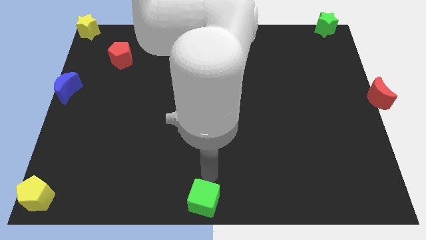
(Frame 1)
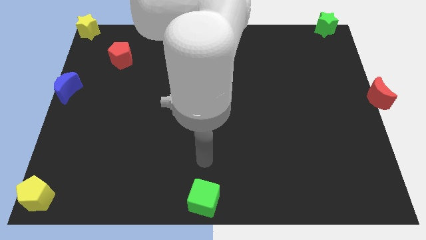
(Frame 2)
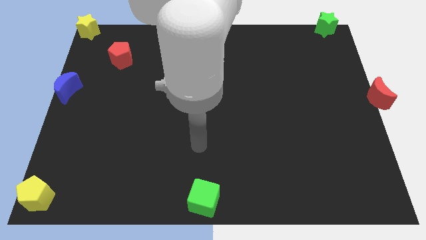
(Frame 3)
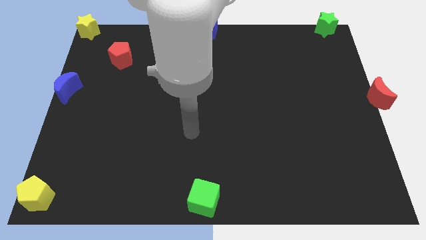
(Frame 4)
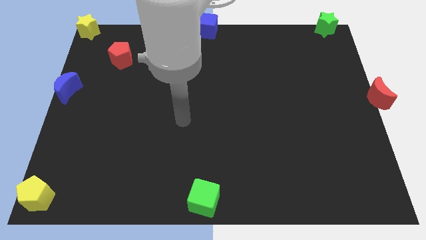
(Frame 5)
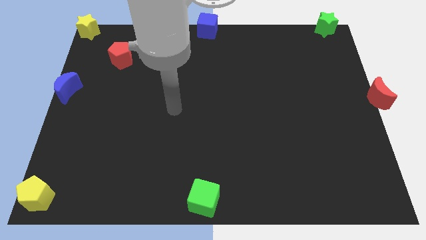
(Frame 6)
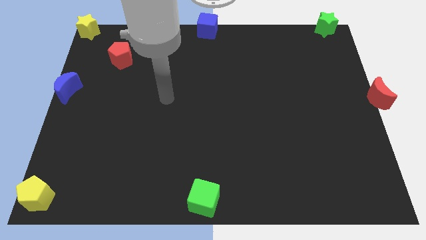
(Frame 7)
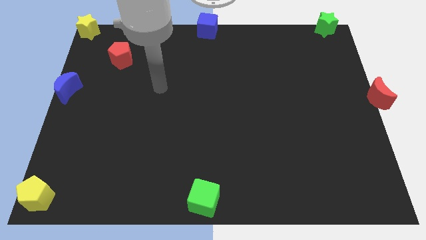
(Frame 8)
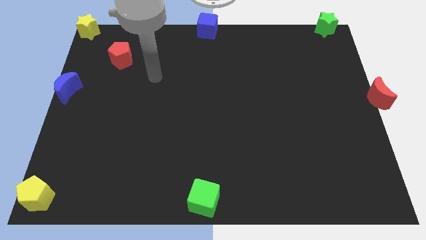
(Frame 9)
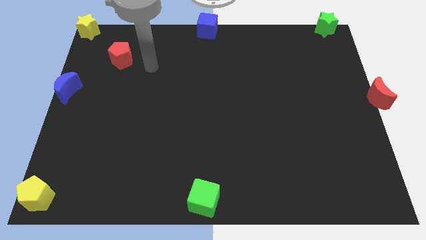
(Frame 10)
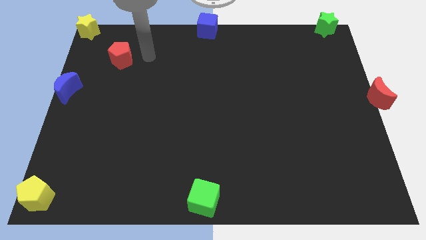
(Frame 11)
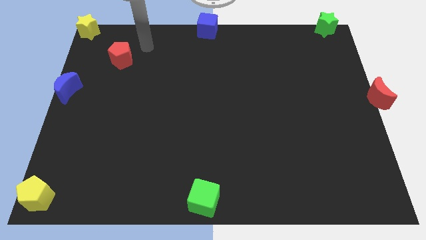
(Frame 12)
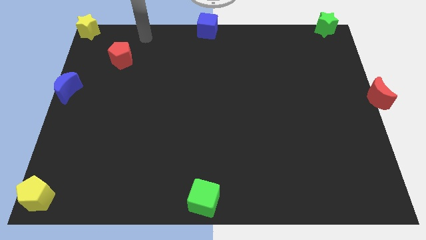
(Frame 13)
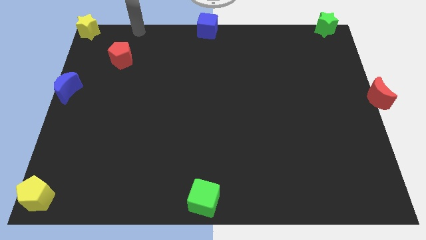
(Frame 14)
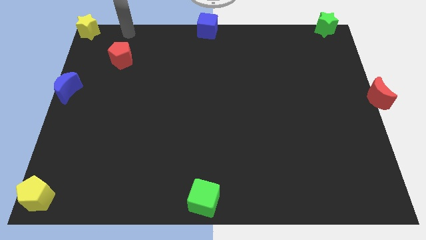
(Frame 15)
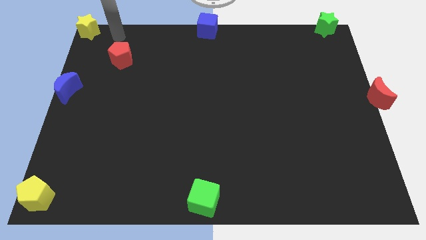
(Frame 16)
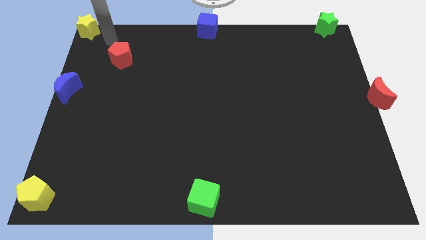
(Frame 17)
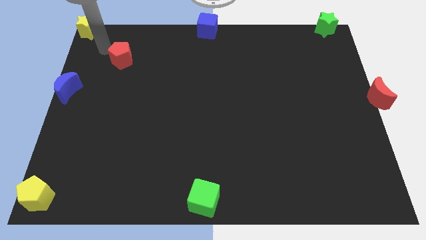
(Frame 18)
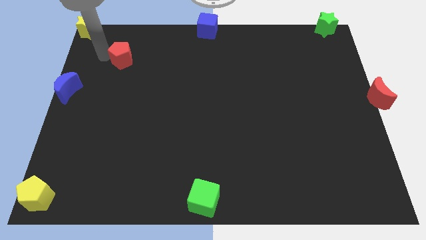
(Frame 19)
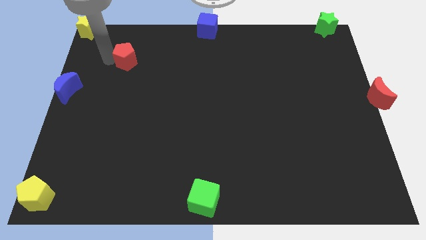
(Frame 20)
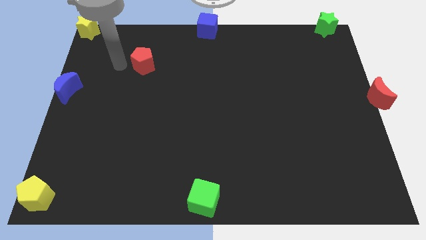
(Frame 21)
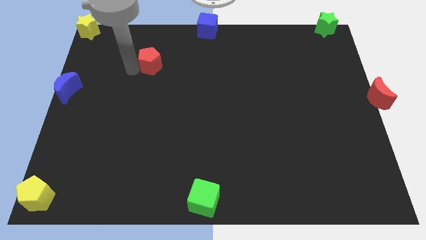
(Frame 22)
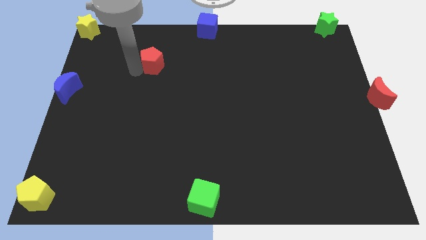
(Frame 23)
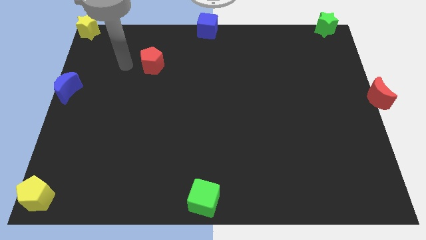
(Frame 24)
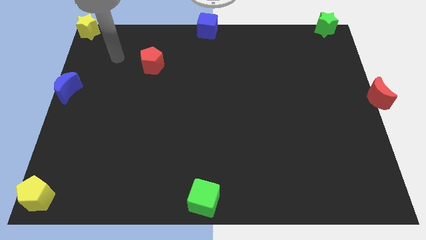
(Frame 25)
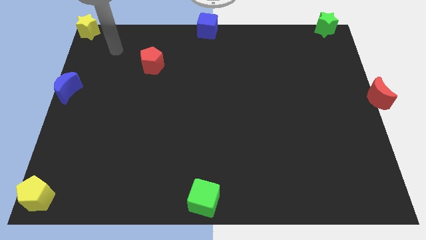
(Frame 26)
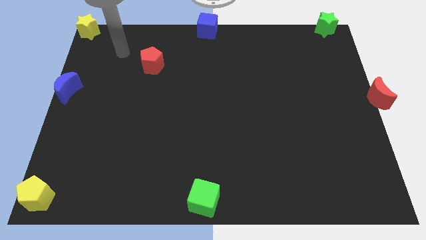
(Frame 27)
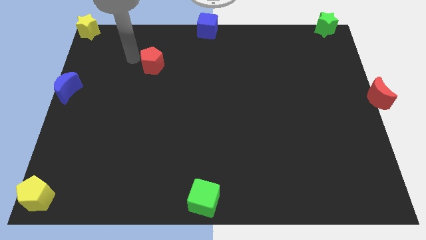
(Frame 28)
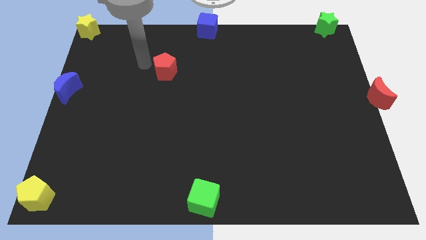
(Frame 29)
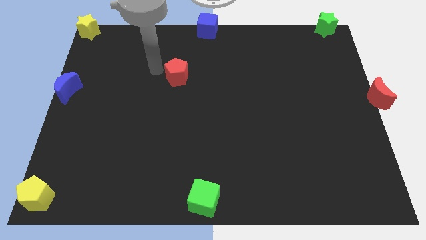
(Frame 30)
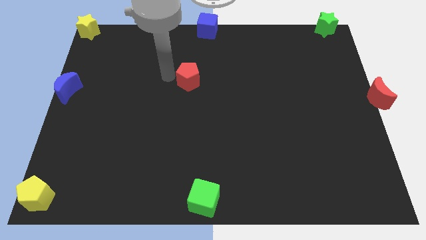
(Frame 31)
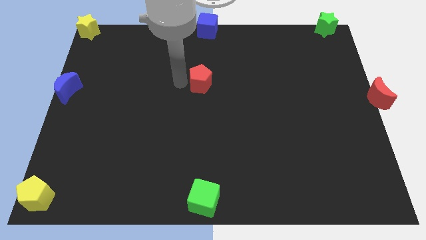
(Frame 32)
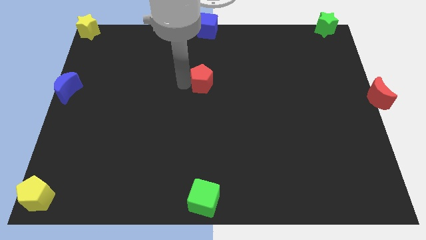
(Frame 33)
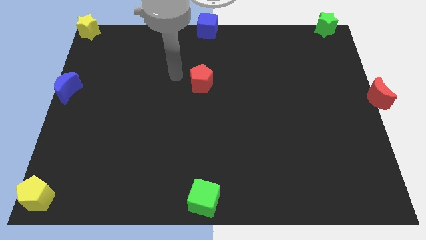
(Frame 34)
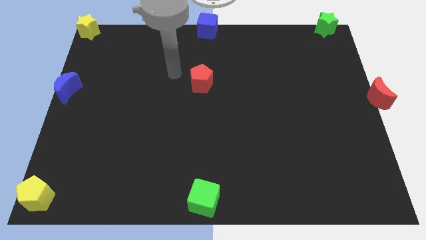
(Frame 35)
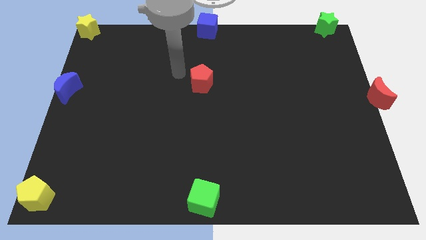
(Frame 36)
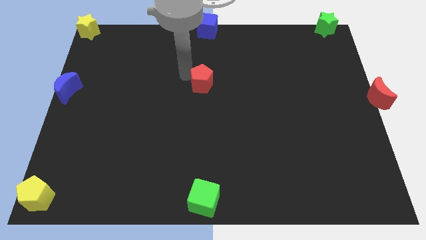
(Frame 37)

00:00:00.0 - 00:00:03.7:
push the red pentagon to the center of the board

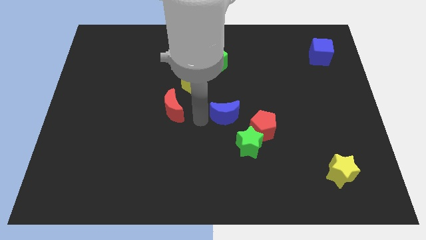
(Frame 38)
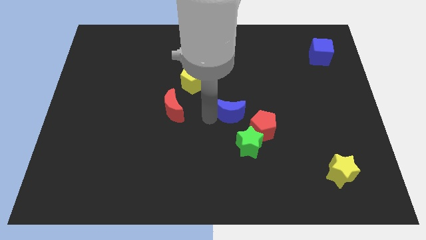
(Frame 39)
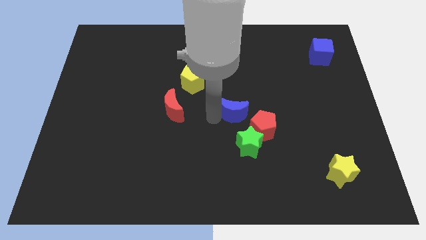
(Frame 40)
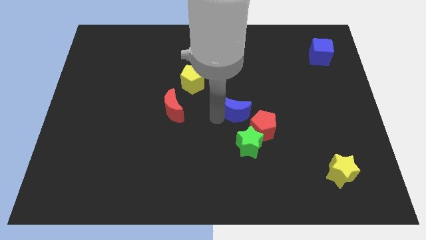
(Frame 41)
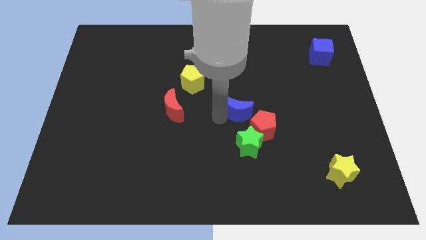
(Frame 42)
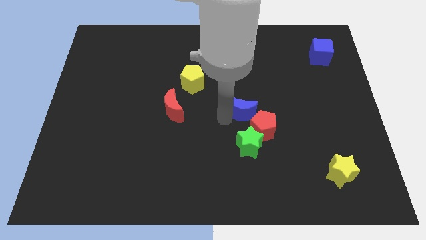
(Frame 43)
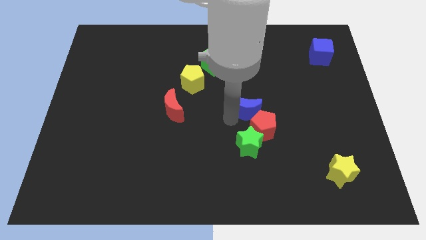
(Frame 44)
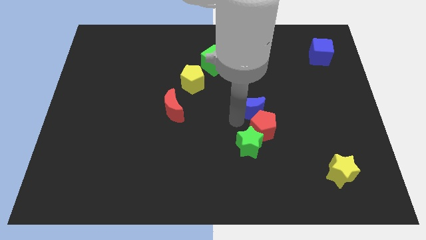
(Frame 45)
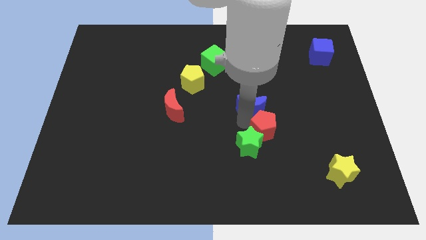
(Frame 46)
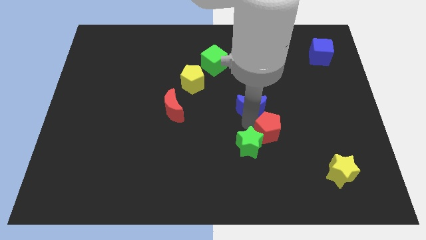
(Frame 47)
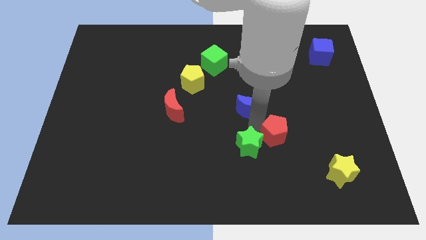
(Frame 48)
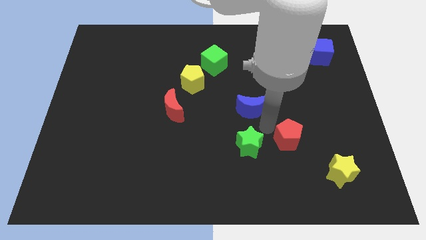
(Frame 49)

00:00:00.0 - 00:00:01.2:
place blue crescent above green star

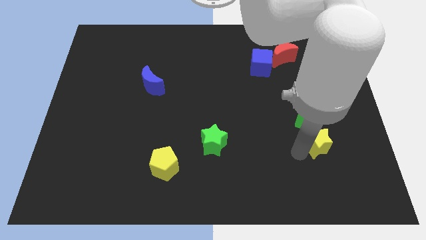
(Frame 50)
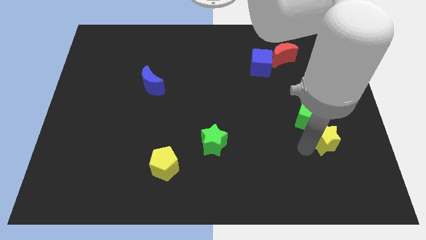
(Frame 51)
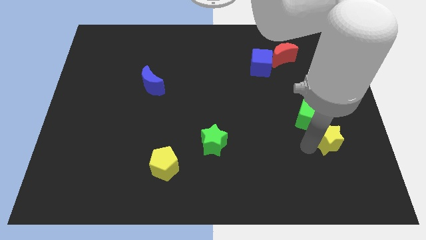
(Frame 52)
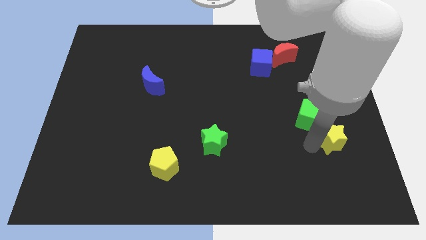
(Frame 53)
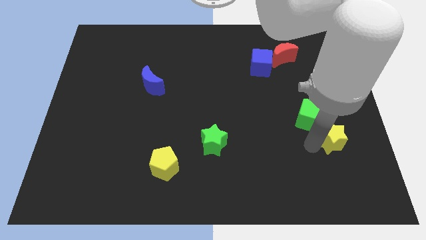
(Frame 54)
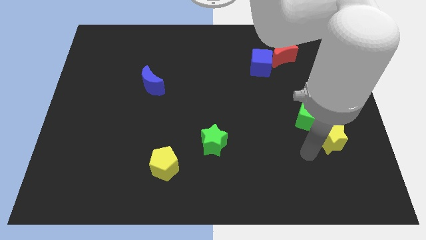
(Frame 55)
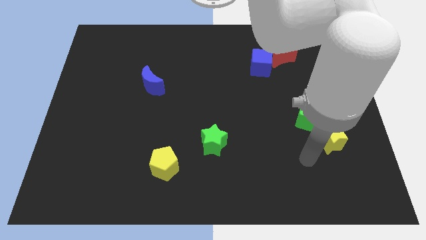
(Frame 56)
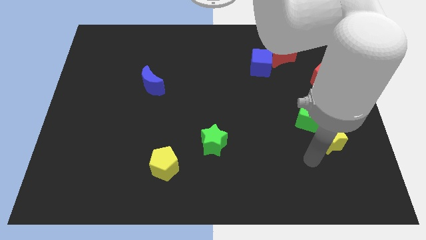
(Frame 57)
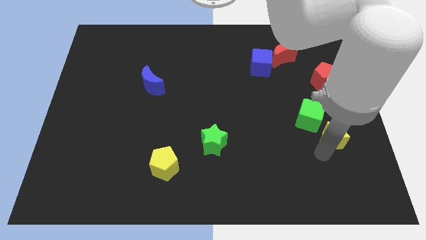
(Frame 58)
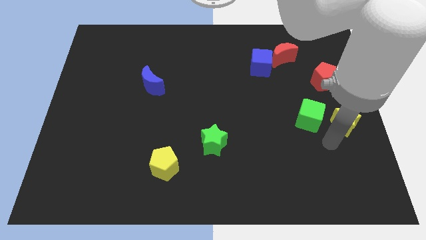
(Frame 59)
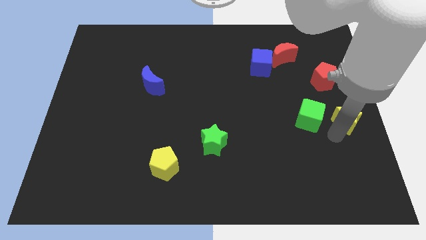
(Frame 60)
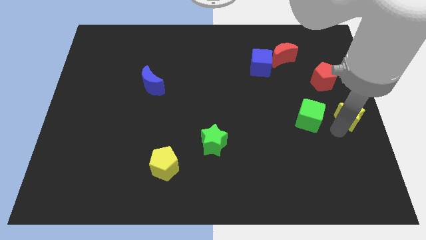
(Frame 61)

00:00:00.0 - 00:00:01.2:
put the yellow star to the right of the green cube

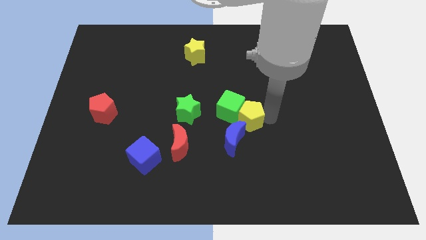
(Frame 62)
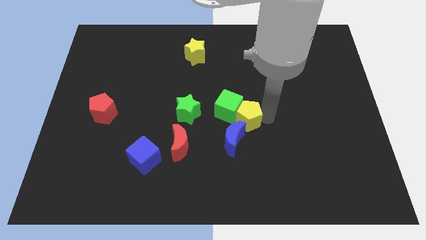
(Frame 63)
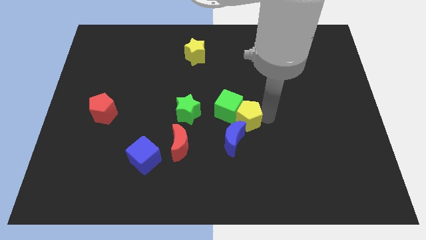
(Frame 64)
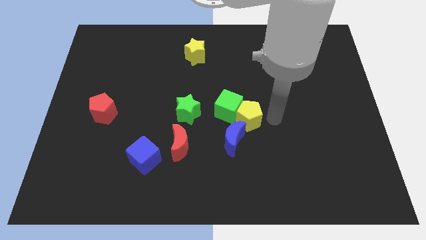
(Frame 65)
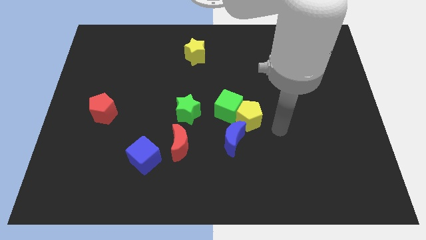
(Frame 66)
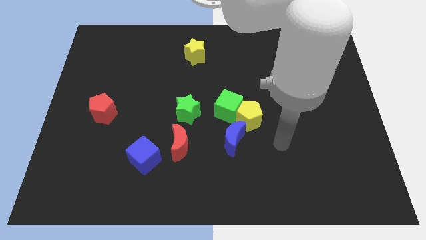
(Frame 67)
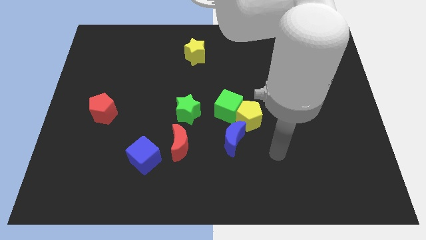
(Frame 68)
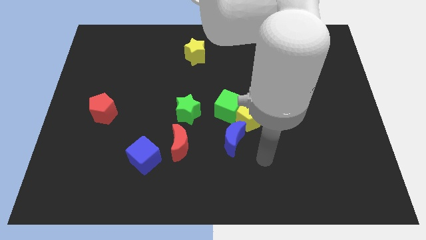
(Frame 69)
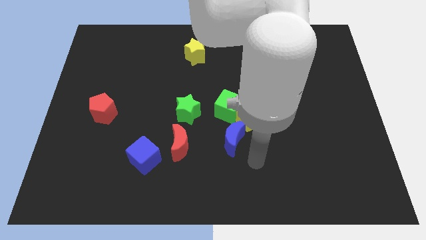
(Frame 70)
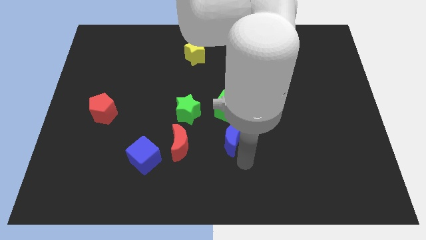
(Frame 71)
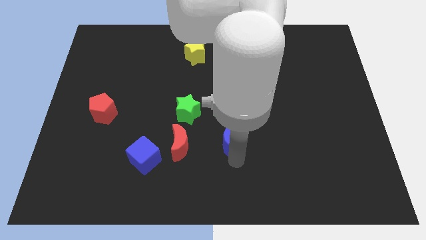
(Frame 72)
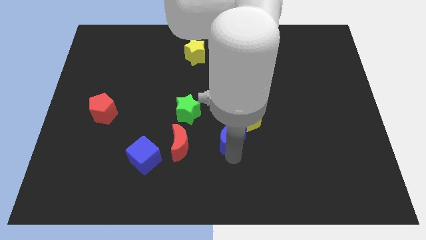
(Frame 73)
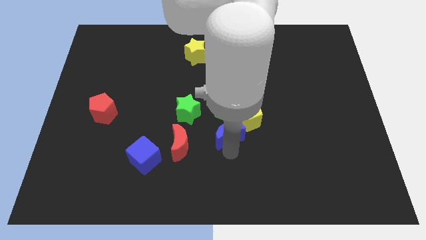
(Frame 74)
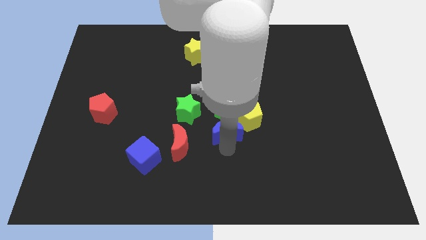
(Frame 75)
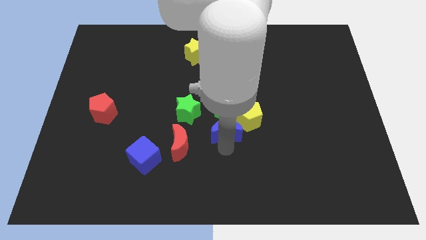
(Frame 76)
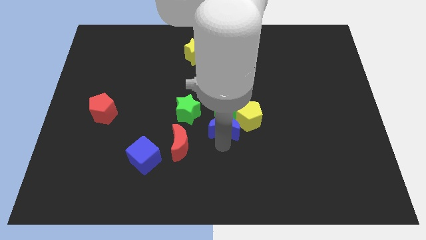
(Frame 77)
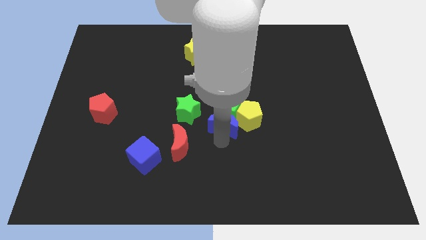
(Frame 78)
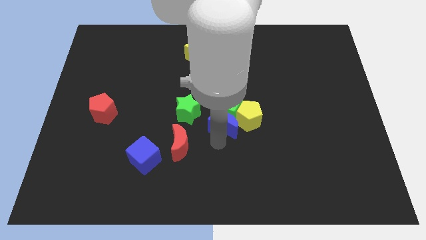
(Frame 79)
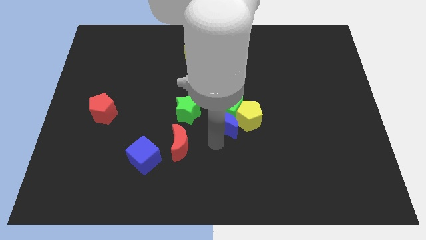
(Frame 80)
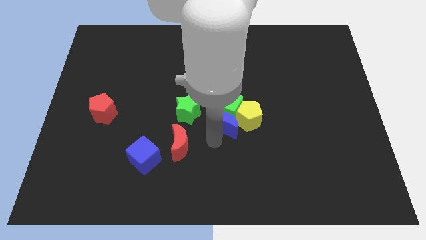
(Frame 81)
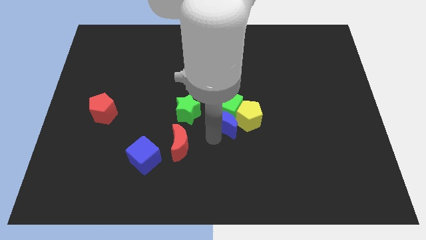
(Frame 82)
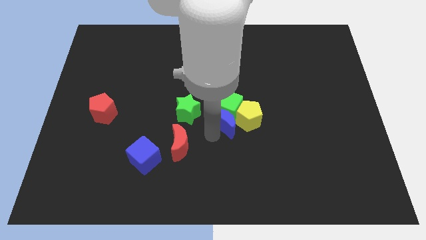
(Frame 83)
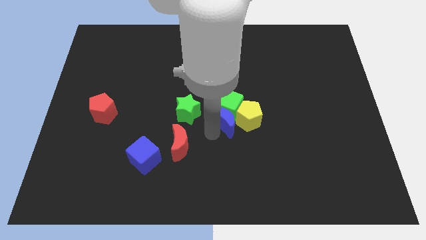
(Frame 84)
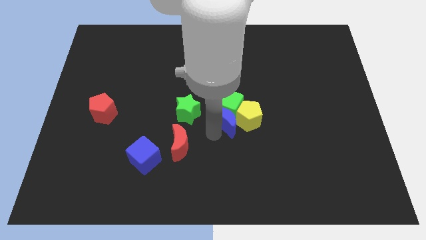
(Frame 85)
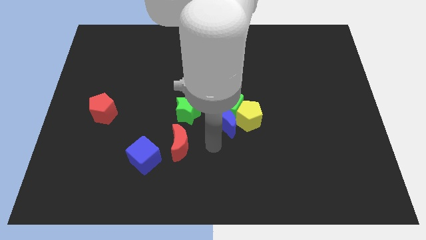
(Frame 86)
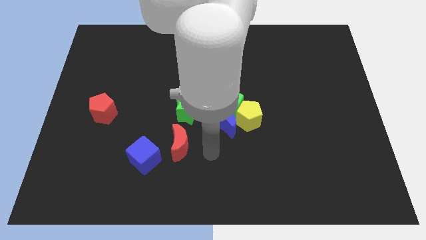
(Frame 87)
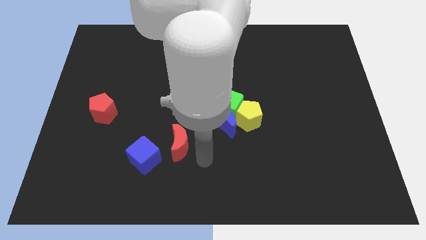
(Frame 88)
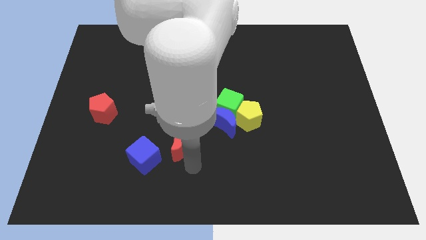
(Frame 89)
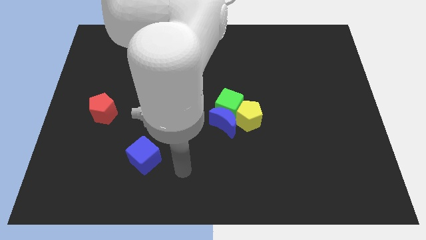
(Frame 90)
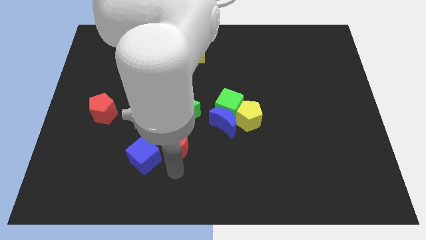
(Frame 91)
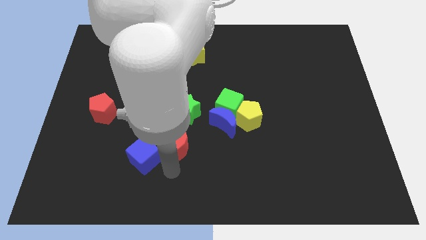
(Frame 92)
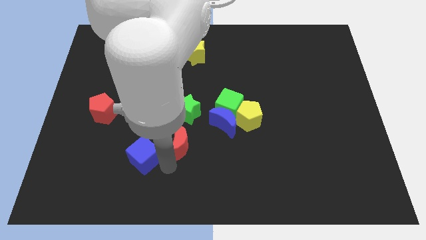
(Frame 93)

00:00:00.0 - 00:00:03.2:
push blue crescent into the green cube and yellow pentagon
